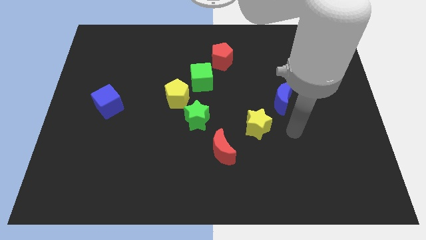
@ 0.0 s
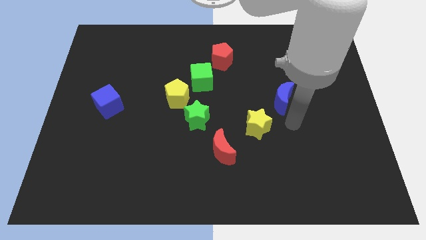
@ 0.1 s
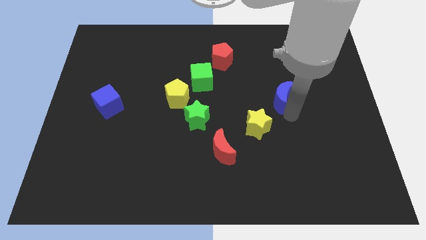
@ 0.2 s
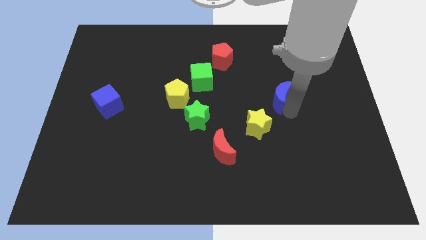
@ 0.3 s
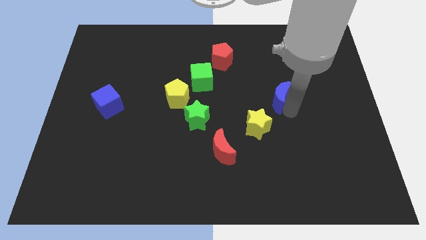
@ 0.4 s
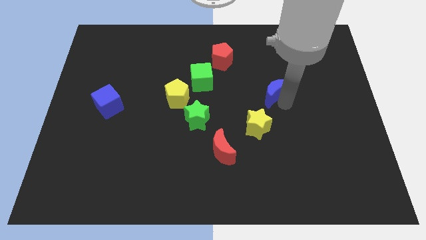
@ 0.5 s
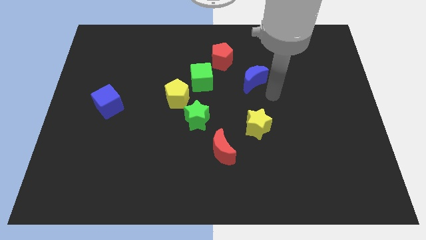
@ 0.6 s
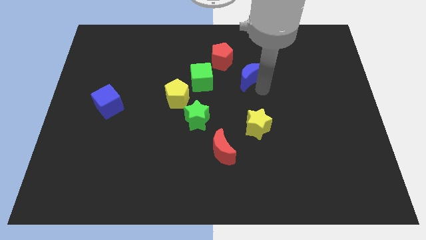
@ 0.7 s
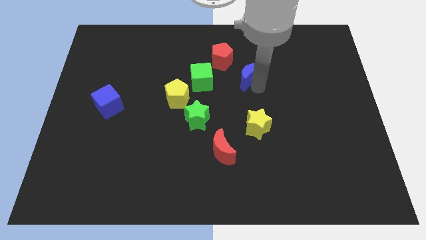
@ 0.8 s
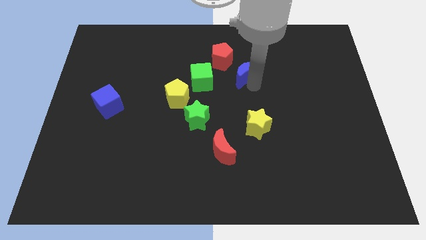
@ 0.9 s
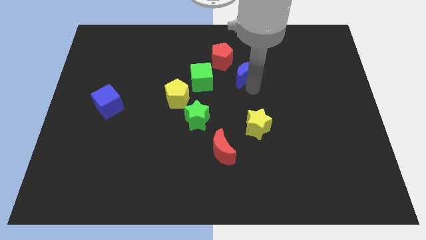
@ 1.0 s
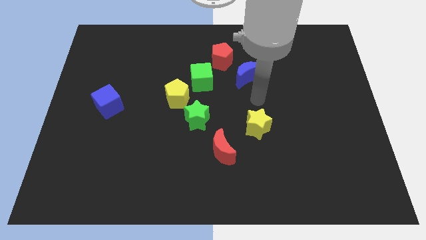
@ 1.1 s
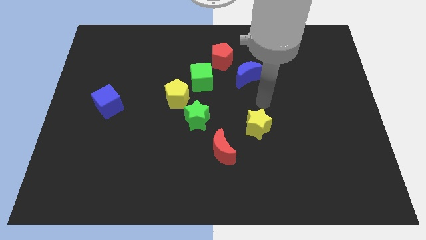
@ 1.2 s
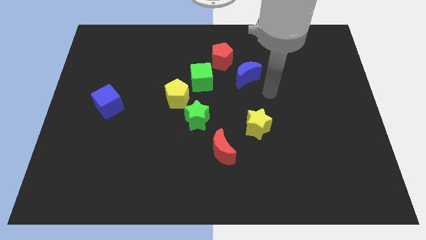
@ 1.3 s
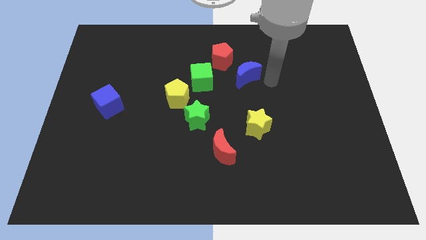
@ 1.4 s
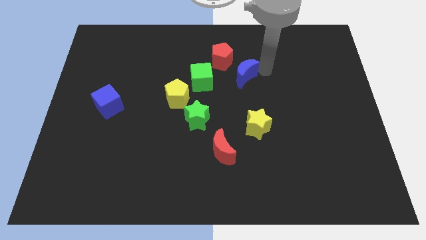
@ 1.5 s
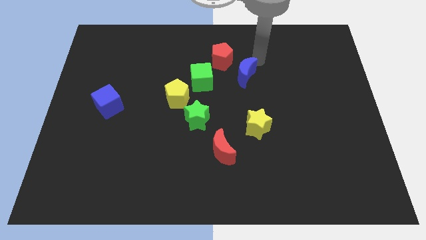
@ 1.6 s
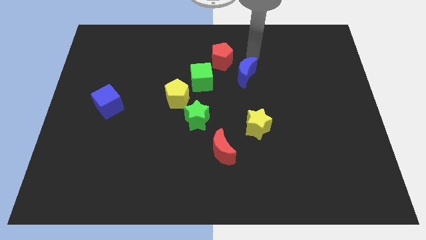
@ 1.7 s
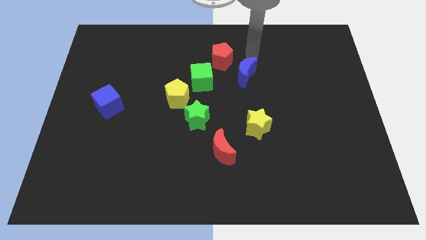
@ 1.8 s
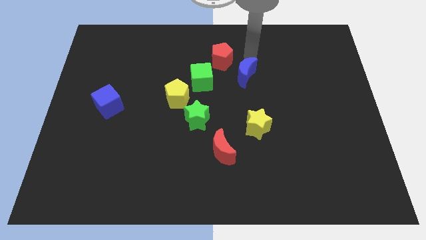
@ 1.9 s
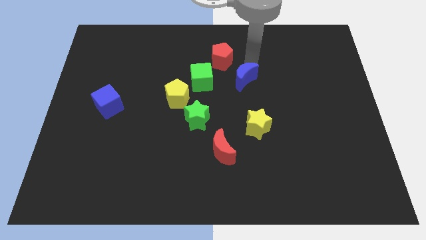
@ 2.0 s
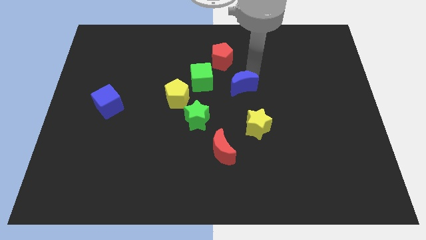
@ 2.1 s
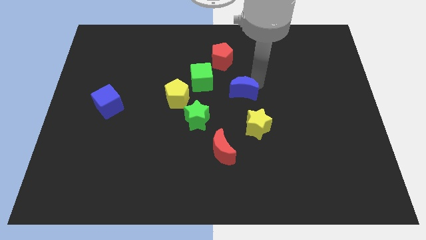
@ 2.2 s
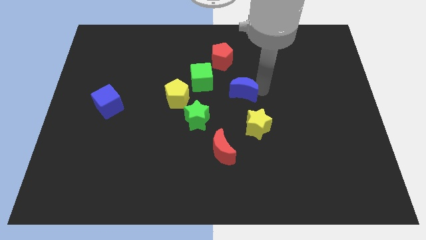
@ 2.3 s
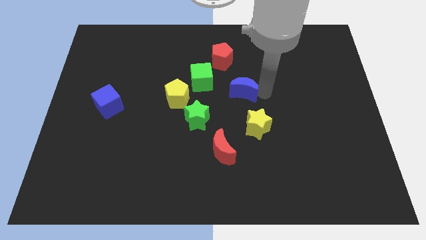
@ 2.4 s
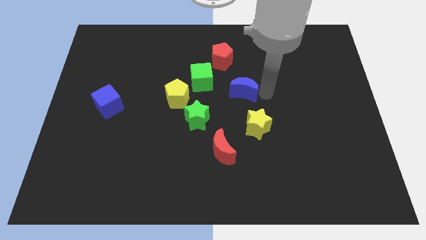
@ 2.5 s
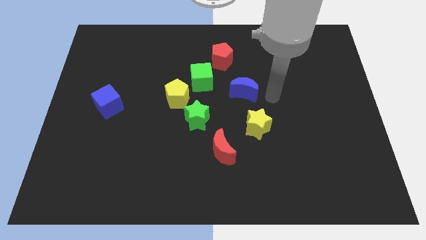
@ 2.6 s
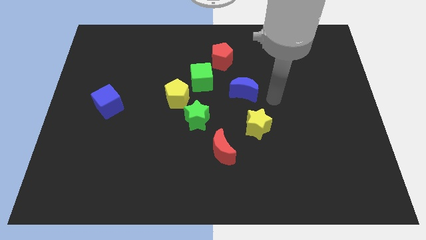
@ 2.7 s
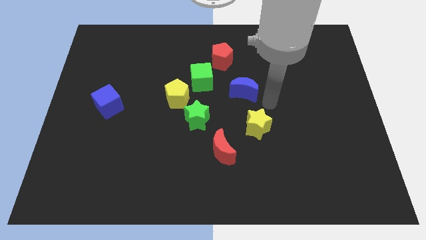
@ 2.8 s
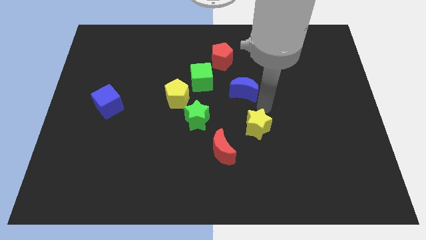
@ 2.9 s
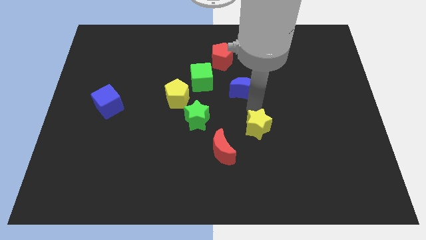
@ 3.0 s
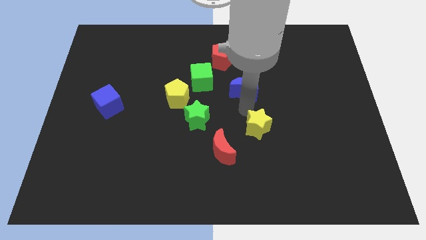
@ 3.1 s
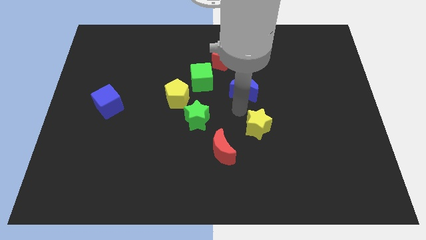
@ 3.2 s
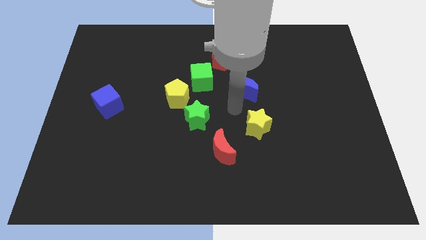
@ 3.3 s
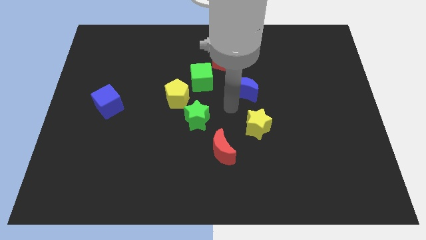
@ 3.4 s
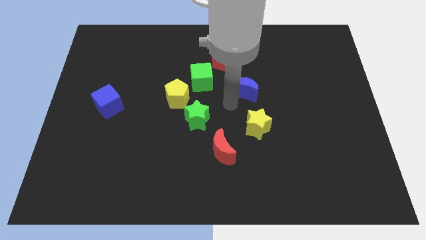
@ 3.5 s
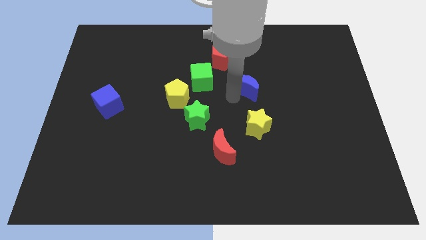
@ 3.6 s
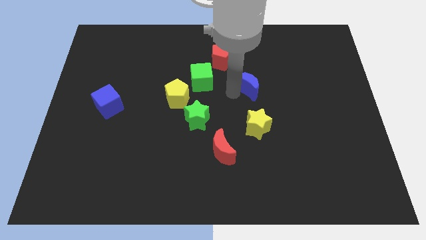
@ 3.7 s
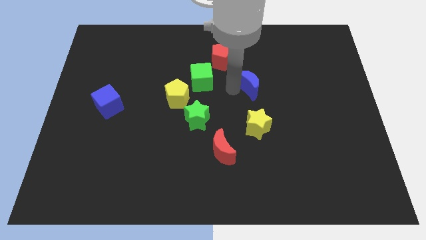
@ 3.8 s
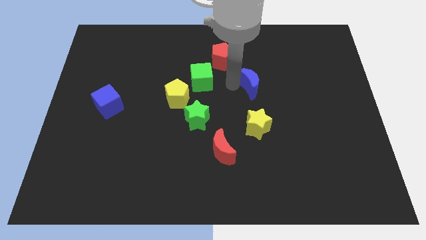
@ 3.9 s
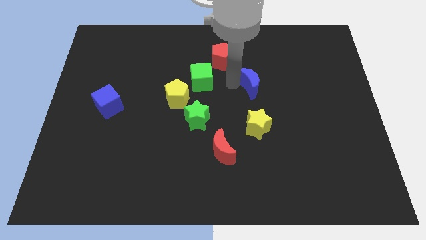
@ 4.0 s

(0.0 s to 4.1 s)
move blue moon to the right of green cube

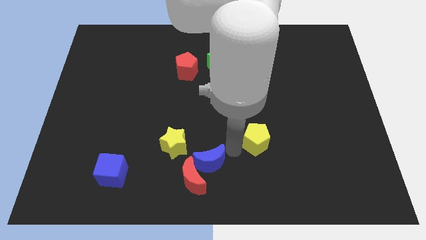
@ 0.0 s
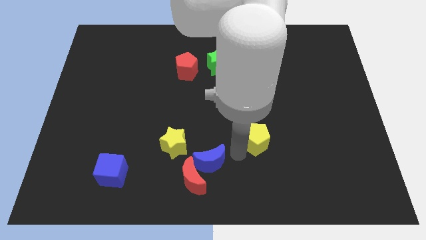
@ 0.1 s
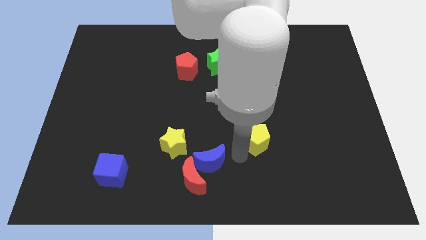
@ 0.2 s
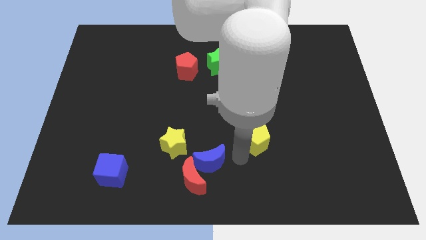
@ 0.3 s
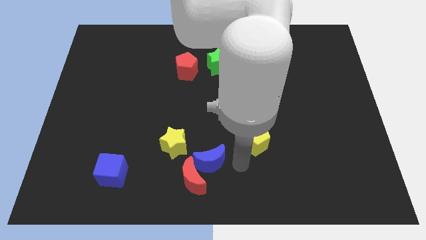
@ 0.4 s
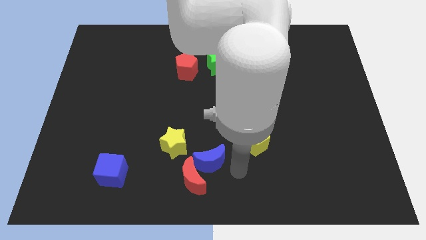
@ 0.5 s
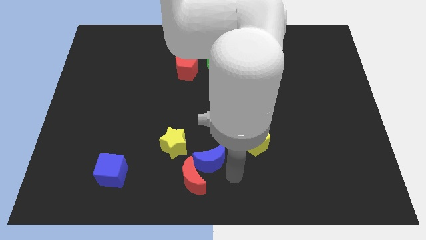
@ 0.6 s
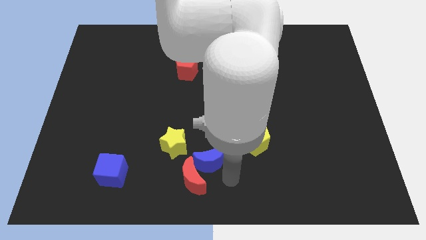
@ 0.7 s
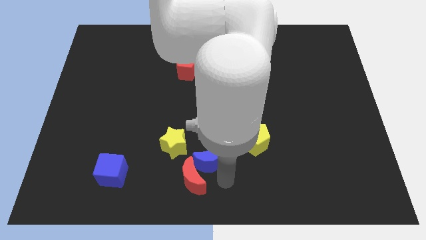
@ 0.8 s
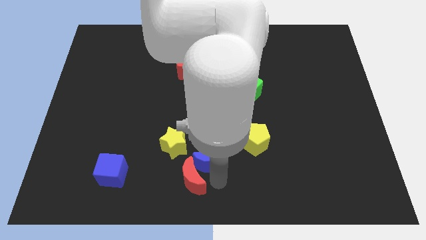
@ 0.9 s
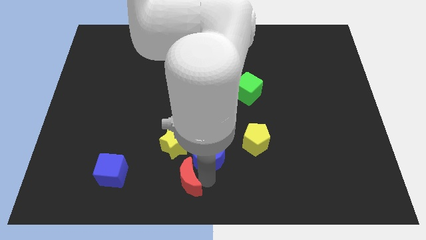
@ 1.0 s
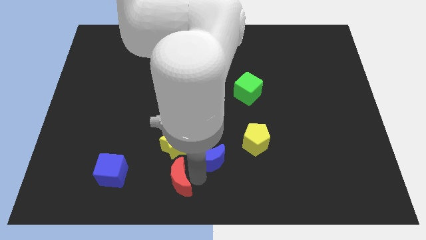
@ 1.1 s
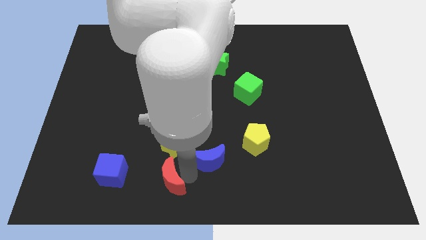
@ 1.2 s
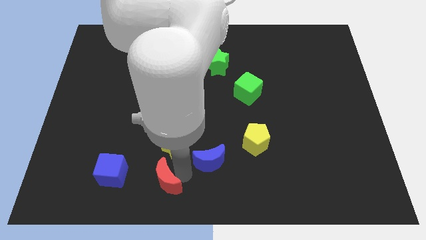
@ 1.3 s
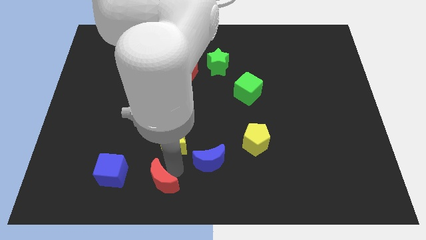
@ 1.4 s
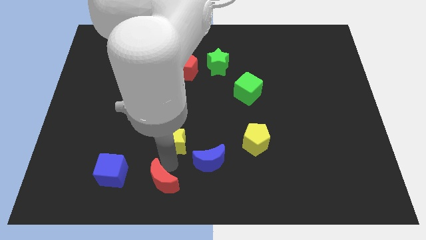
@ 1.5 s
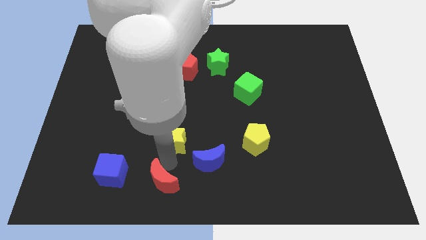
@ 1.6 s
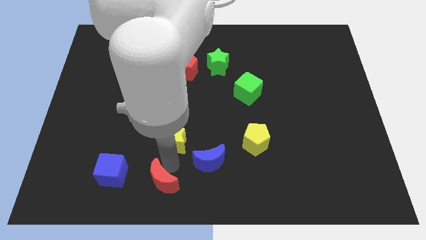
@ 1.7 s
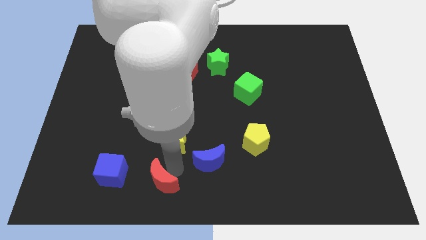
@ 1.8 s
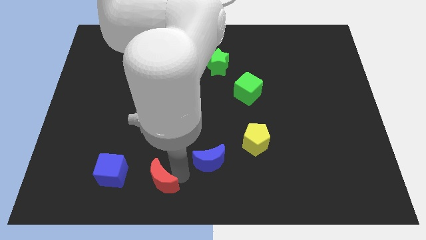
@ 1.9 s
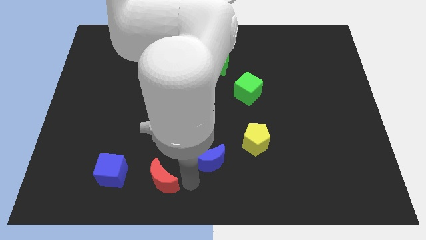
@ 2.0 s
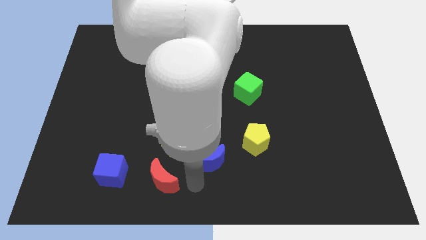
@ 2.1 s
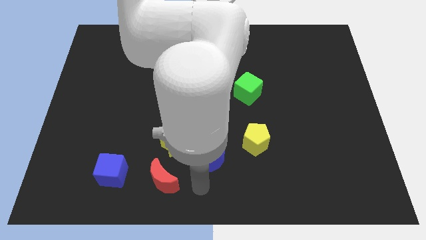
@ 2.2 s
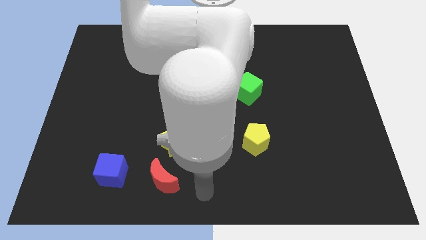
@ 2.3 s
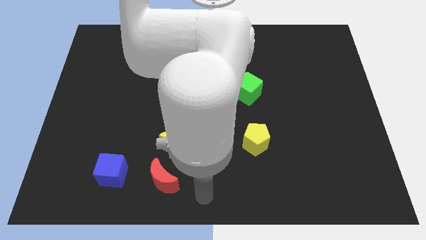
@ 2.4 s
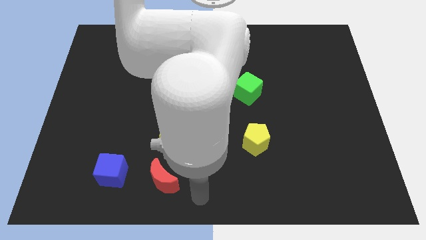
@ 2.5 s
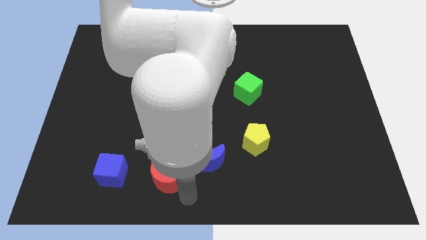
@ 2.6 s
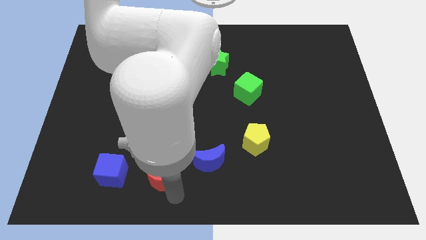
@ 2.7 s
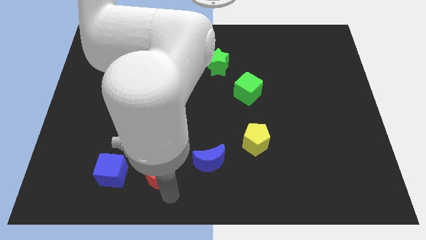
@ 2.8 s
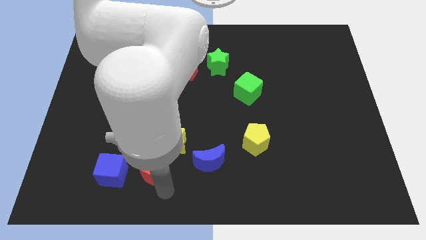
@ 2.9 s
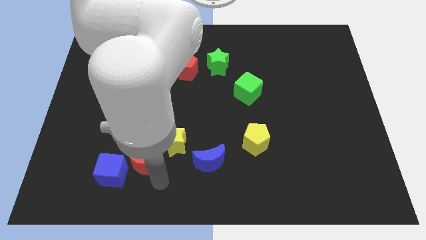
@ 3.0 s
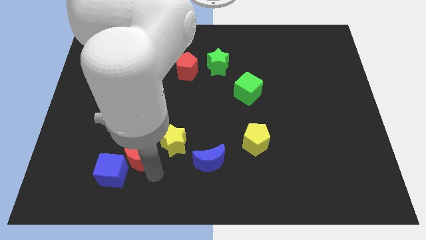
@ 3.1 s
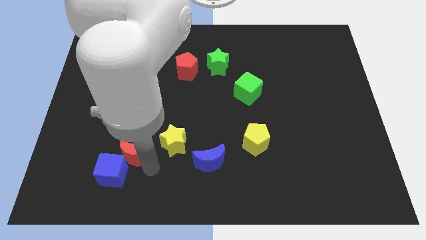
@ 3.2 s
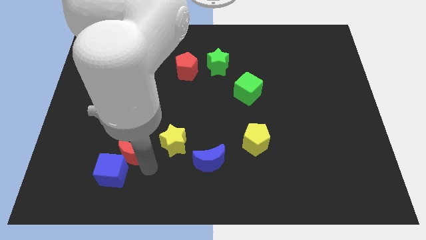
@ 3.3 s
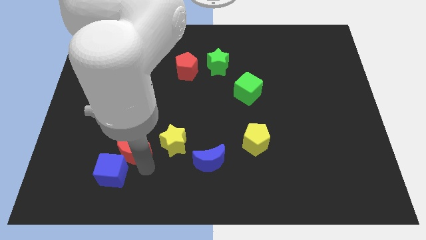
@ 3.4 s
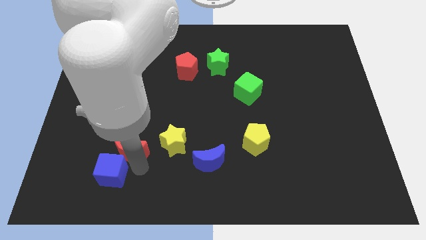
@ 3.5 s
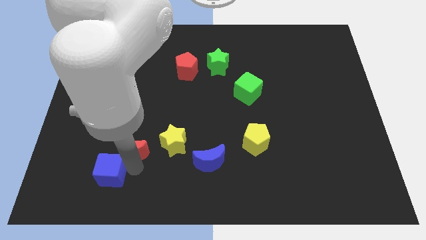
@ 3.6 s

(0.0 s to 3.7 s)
push the red moon towards the blue cube

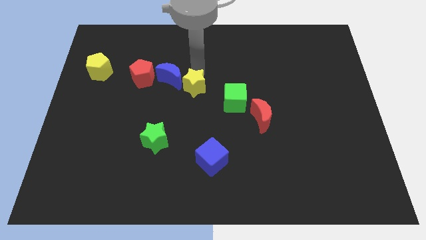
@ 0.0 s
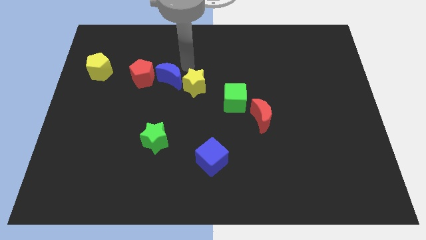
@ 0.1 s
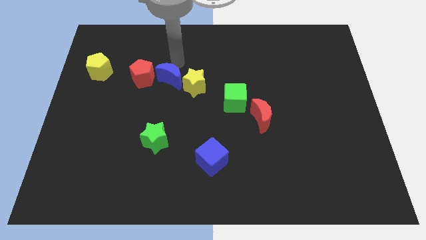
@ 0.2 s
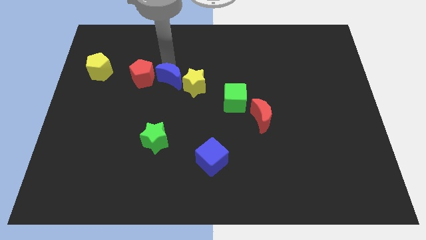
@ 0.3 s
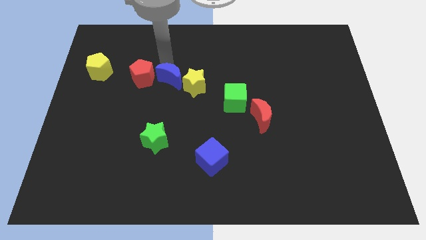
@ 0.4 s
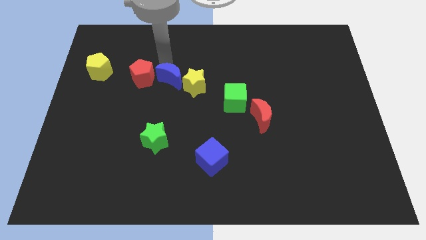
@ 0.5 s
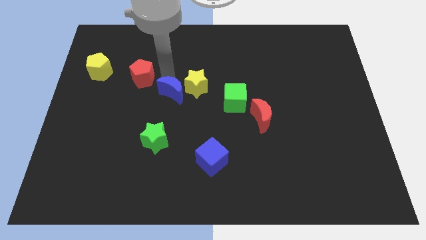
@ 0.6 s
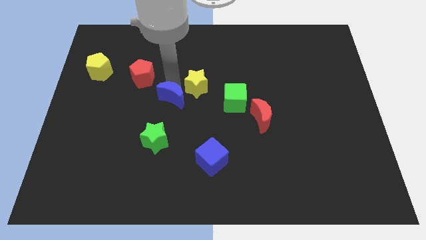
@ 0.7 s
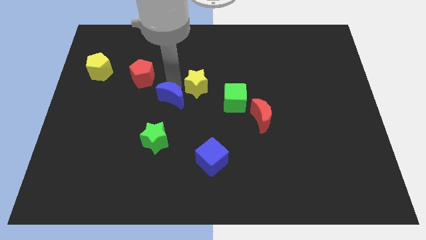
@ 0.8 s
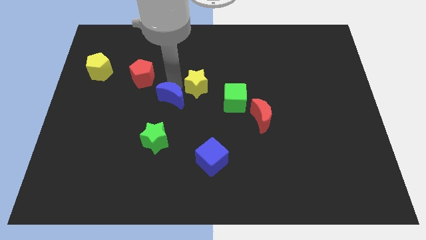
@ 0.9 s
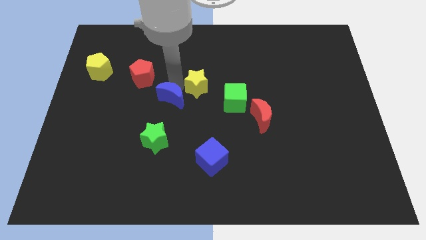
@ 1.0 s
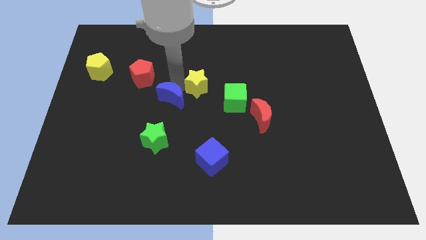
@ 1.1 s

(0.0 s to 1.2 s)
push the blue crescent to the down
